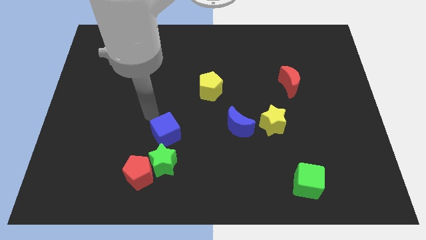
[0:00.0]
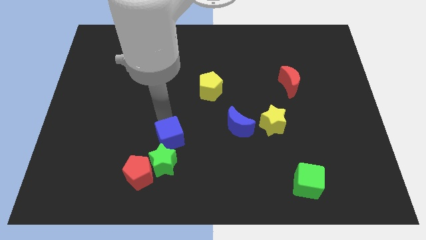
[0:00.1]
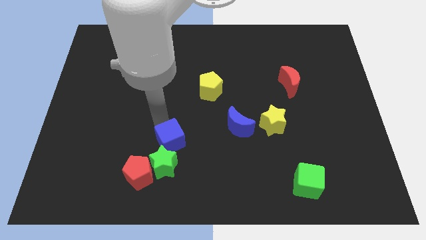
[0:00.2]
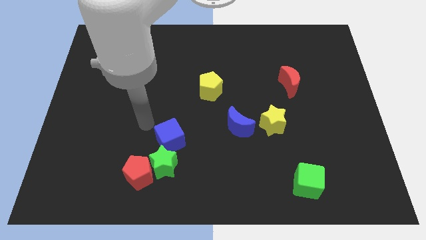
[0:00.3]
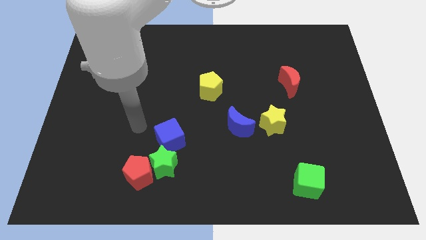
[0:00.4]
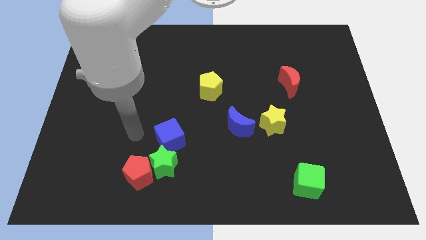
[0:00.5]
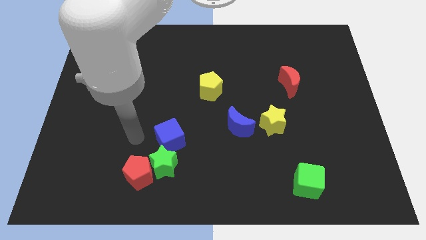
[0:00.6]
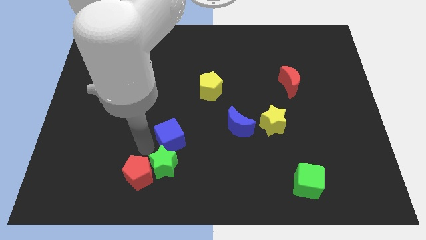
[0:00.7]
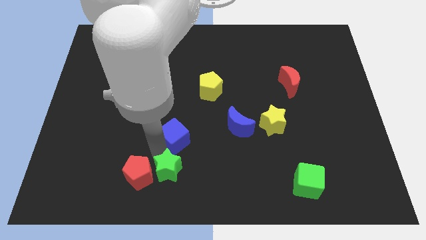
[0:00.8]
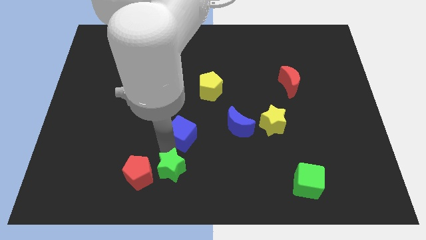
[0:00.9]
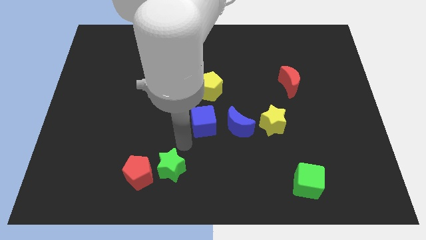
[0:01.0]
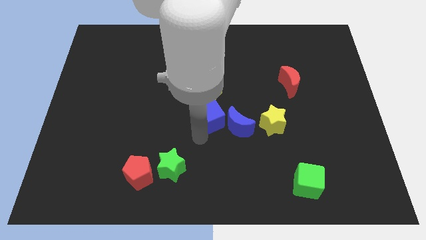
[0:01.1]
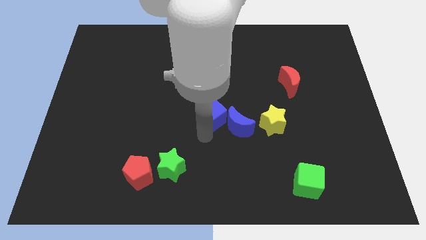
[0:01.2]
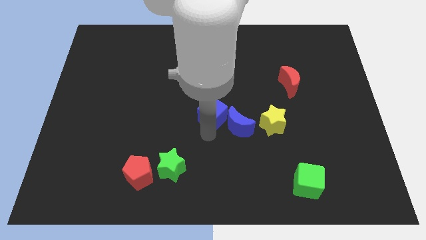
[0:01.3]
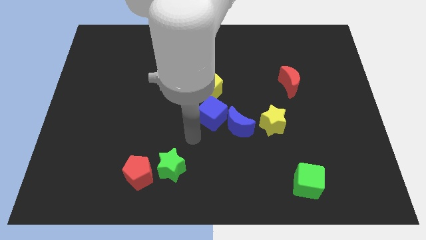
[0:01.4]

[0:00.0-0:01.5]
push the blue cube towards blue moon

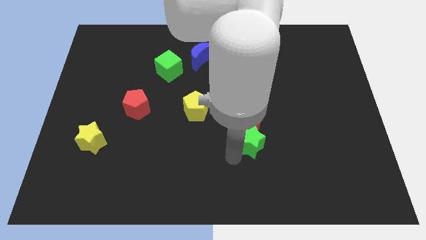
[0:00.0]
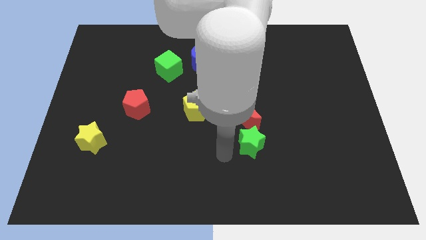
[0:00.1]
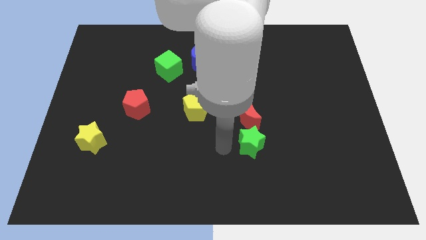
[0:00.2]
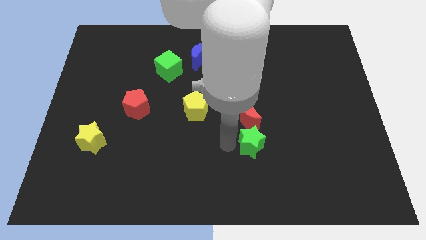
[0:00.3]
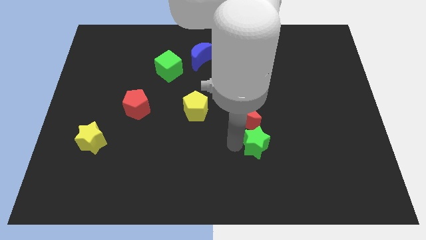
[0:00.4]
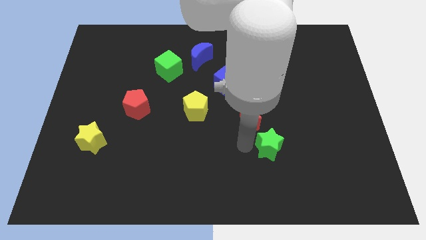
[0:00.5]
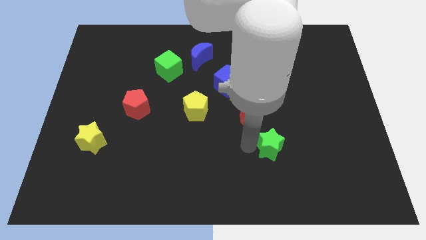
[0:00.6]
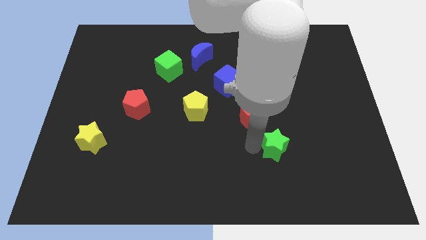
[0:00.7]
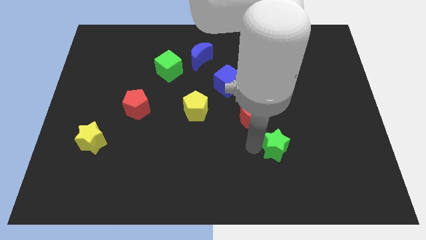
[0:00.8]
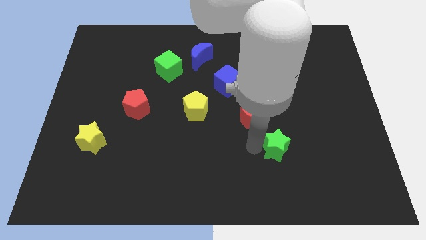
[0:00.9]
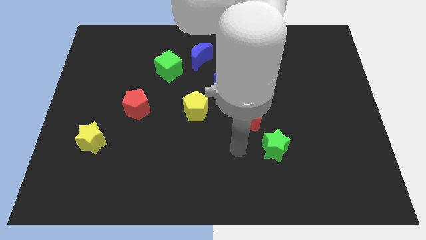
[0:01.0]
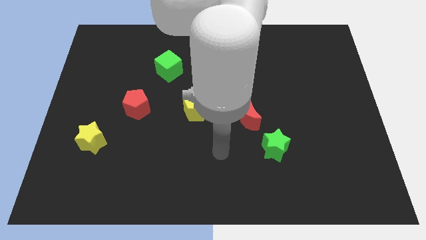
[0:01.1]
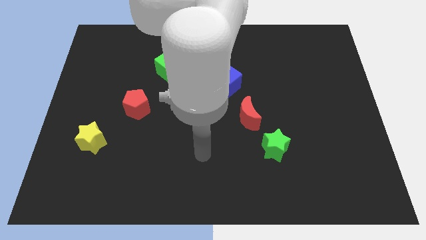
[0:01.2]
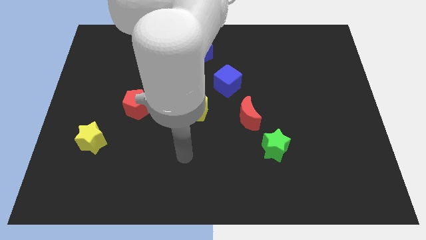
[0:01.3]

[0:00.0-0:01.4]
slide the green star slightly to the right

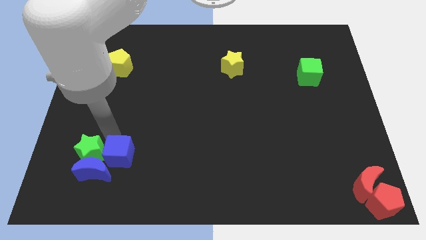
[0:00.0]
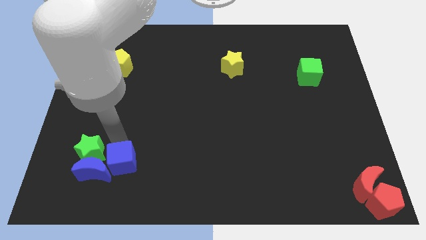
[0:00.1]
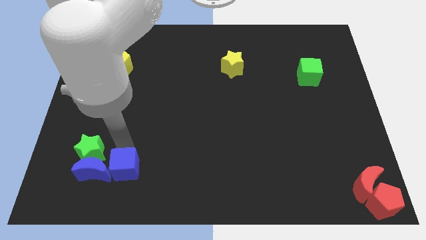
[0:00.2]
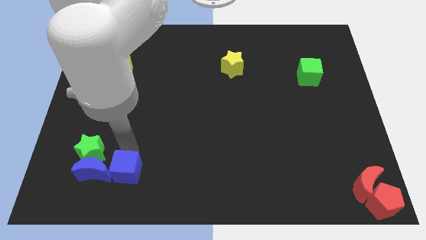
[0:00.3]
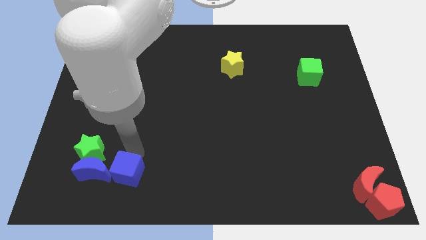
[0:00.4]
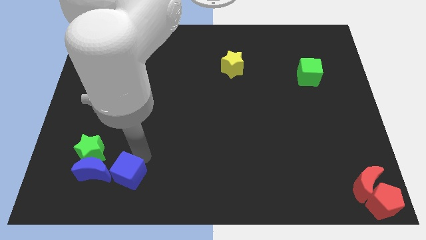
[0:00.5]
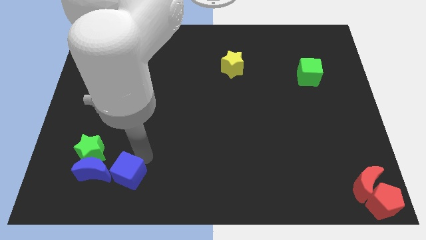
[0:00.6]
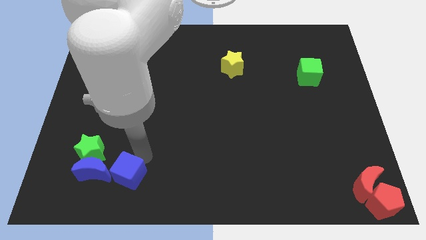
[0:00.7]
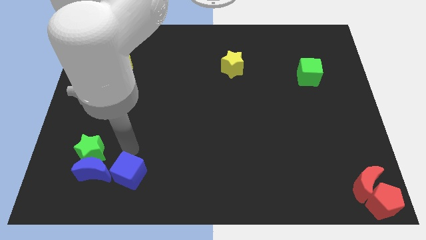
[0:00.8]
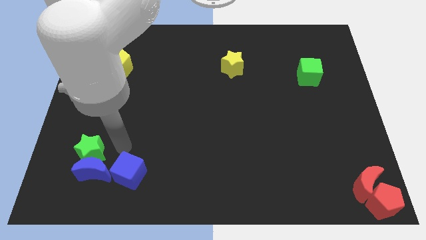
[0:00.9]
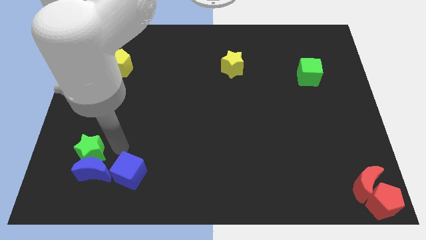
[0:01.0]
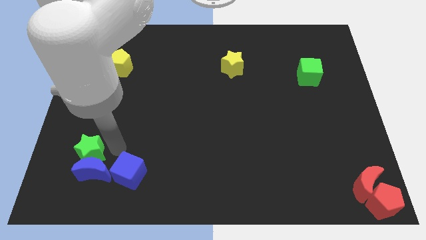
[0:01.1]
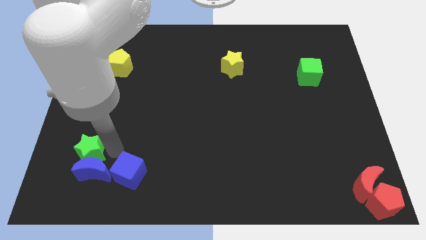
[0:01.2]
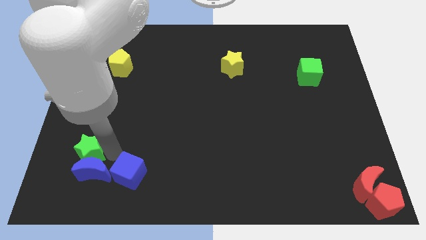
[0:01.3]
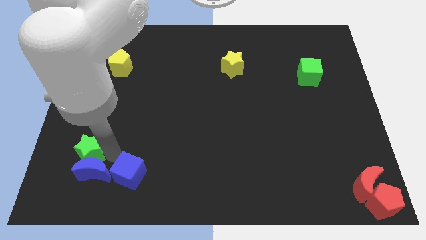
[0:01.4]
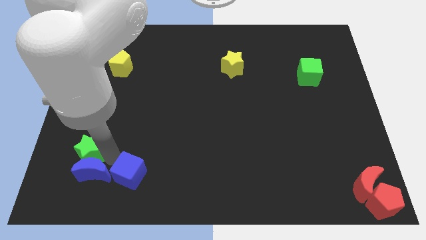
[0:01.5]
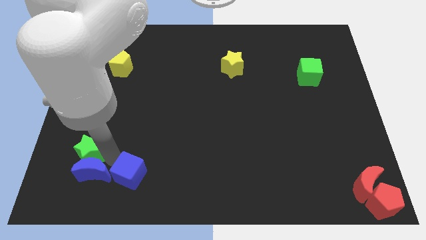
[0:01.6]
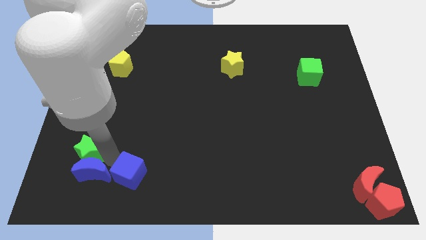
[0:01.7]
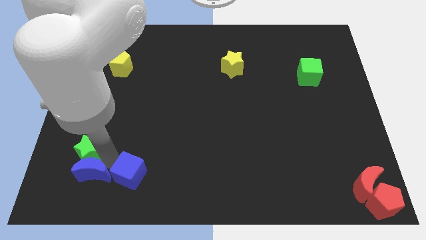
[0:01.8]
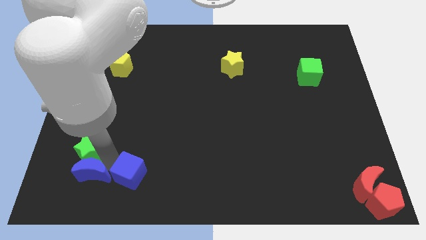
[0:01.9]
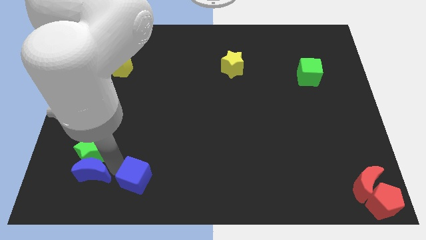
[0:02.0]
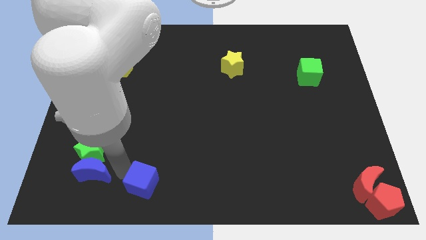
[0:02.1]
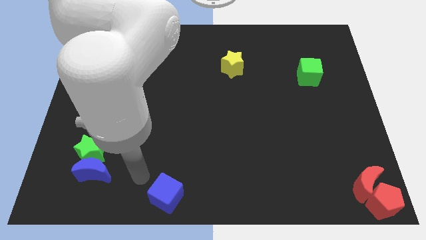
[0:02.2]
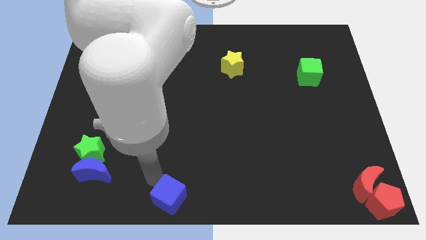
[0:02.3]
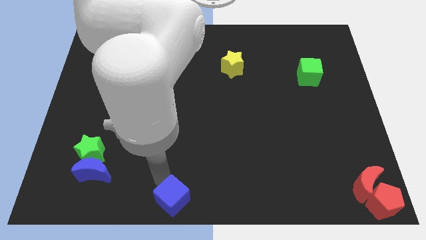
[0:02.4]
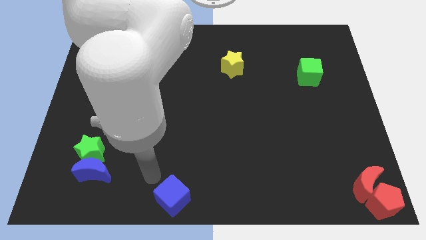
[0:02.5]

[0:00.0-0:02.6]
separate the blue cube from the green star

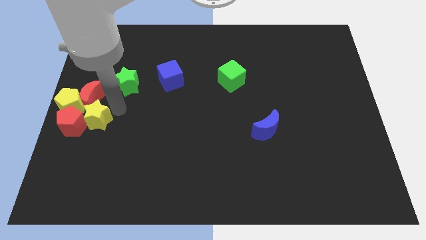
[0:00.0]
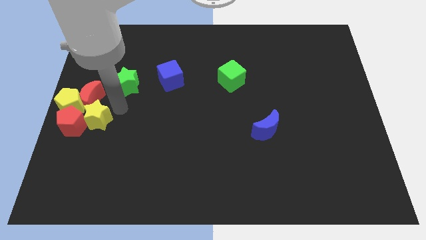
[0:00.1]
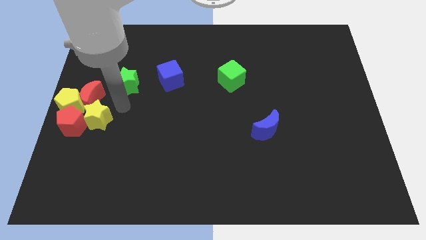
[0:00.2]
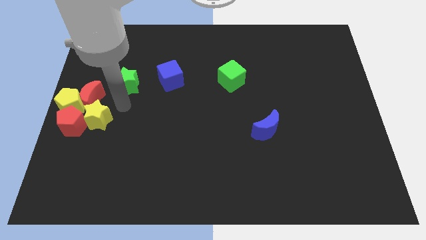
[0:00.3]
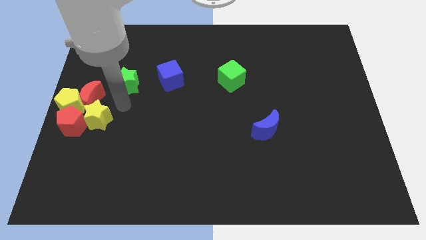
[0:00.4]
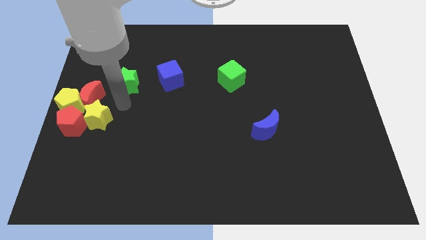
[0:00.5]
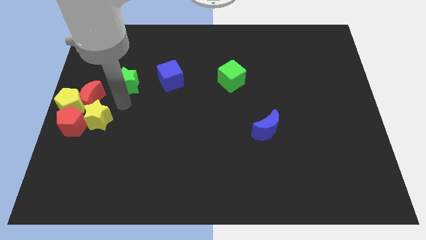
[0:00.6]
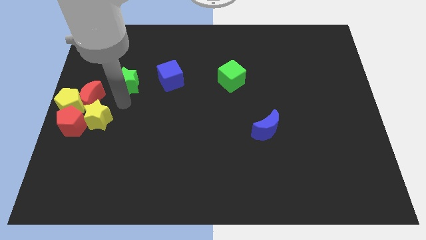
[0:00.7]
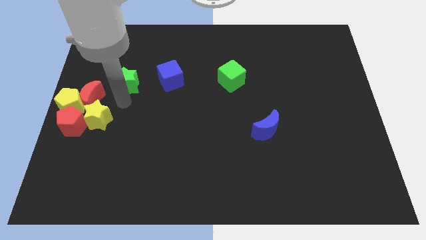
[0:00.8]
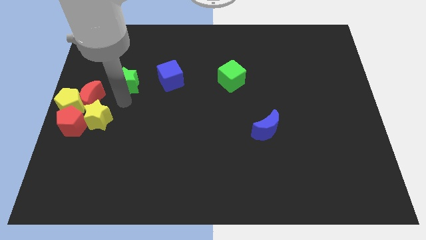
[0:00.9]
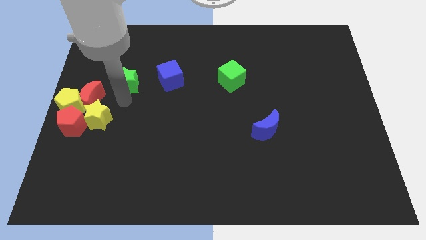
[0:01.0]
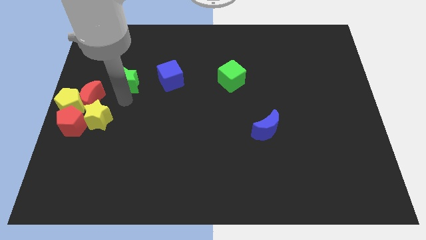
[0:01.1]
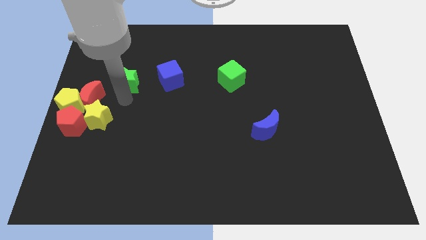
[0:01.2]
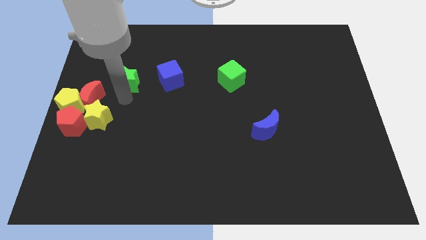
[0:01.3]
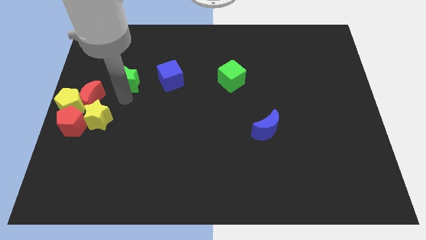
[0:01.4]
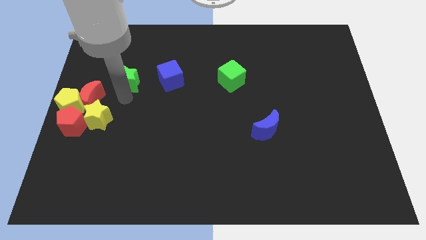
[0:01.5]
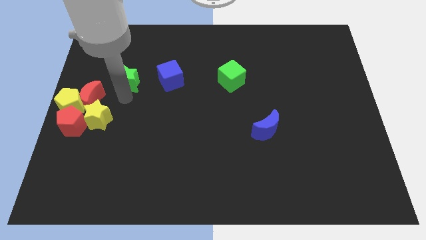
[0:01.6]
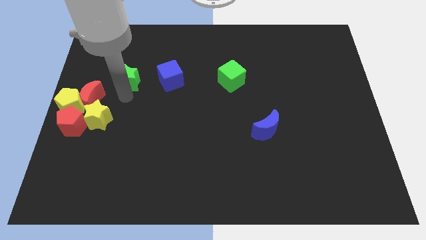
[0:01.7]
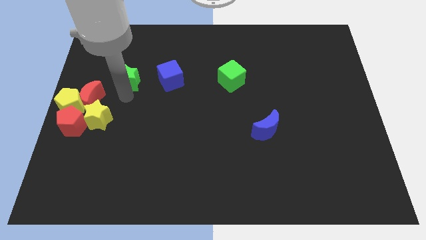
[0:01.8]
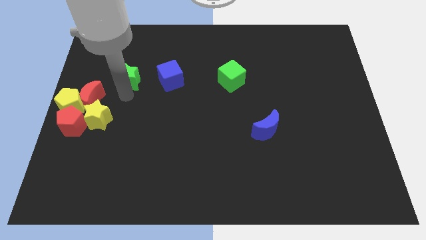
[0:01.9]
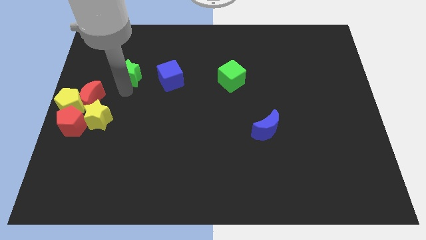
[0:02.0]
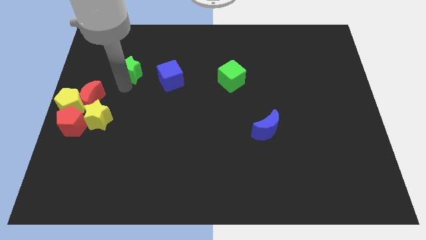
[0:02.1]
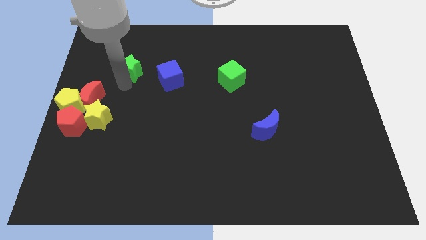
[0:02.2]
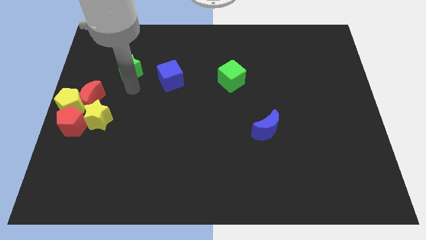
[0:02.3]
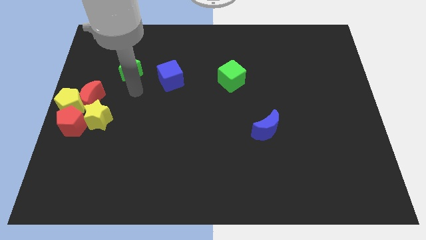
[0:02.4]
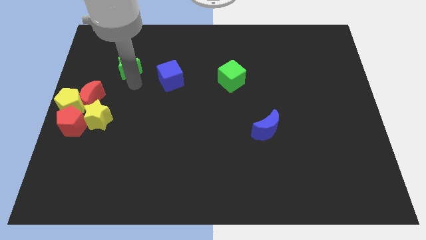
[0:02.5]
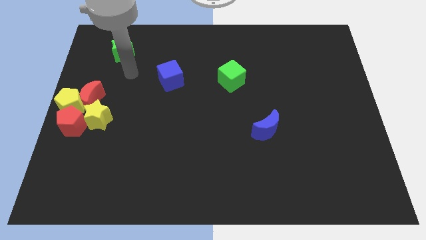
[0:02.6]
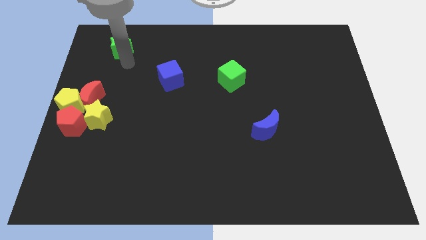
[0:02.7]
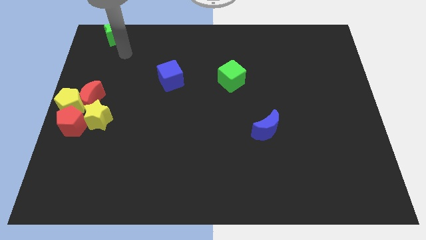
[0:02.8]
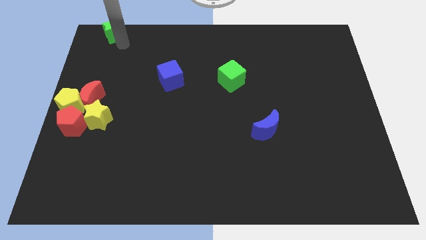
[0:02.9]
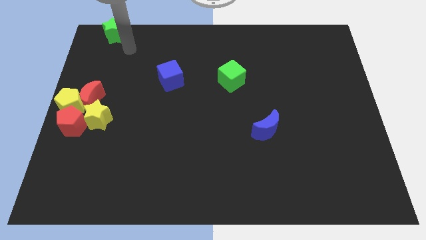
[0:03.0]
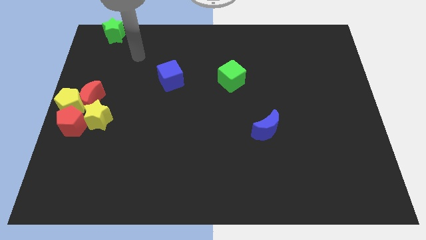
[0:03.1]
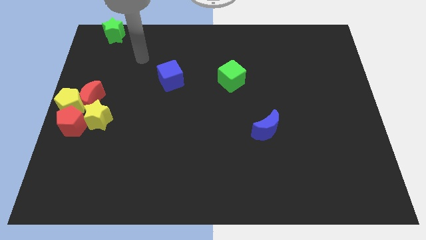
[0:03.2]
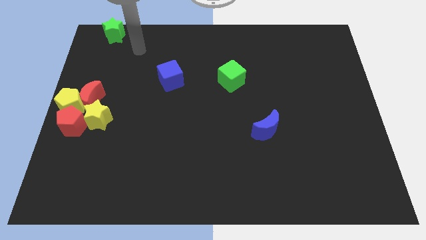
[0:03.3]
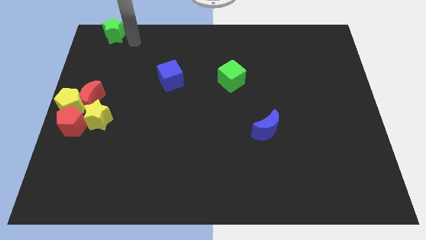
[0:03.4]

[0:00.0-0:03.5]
push the green star to the top left side of the board
